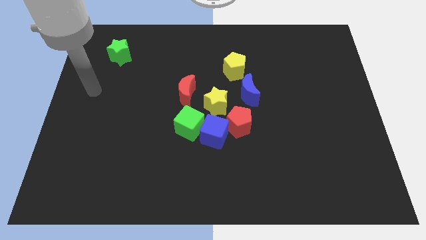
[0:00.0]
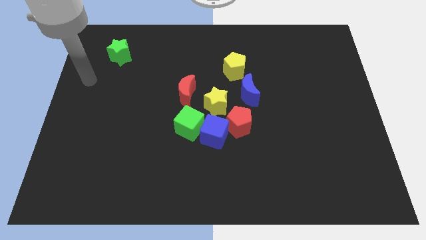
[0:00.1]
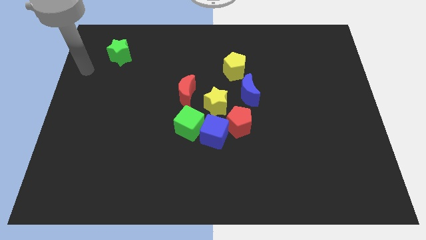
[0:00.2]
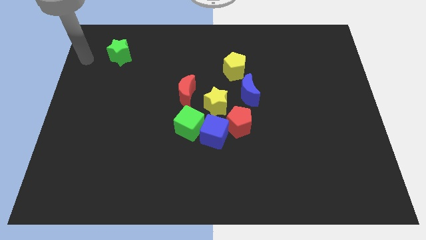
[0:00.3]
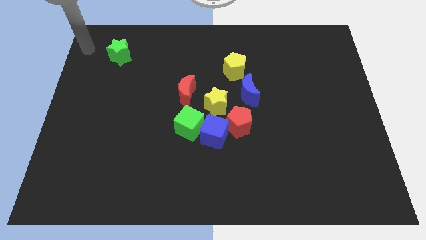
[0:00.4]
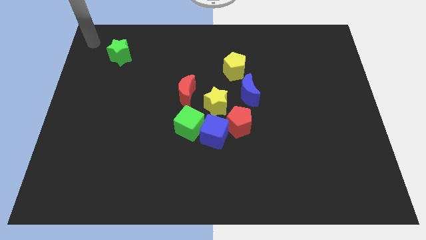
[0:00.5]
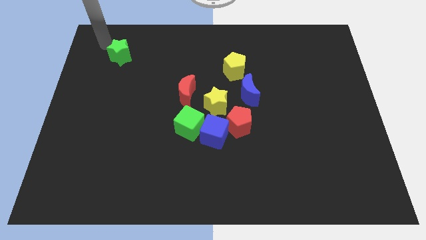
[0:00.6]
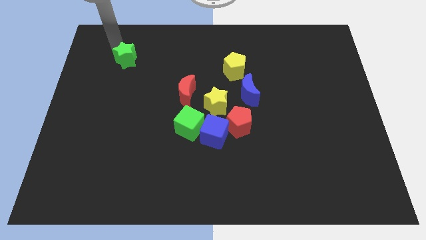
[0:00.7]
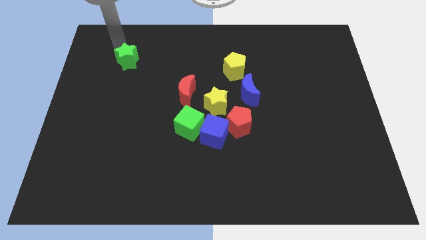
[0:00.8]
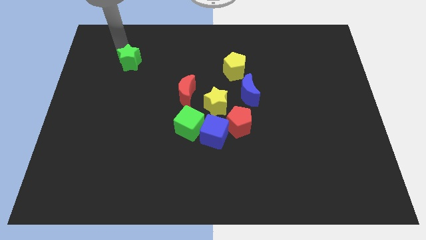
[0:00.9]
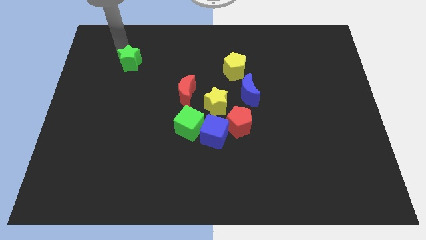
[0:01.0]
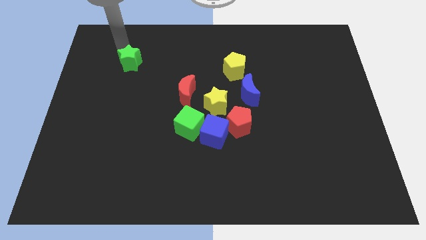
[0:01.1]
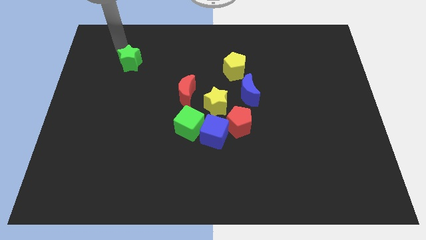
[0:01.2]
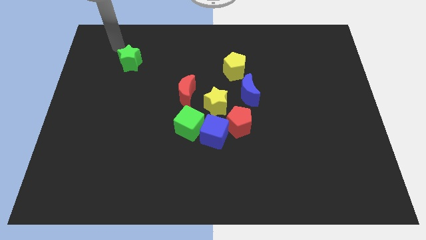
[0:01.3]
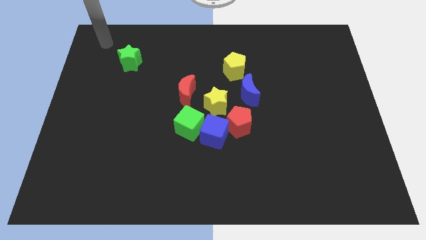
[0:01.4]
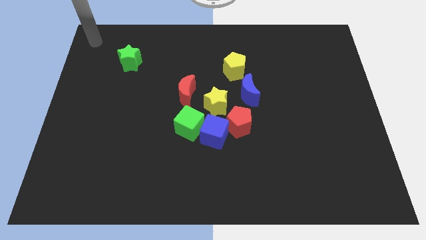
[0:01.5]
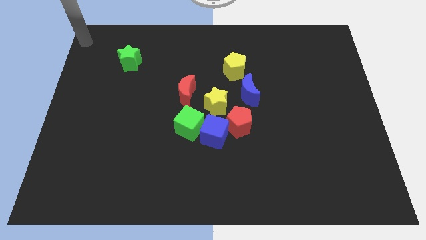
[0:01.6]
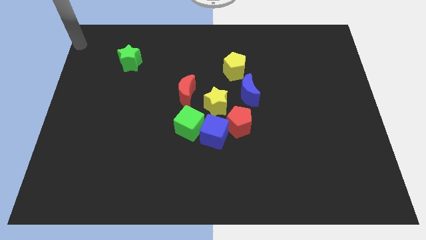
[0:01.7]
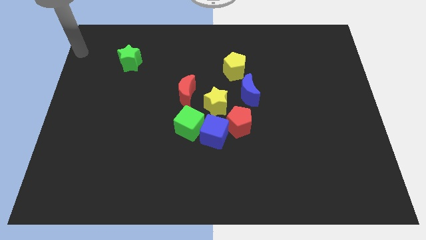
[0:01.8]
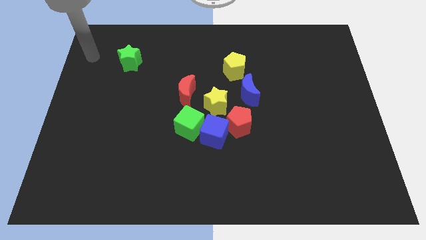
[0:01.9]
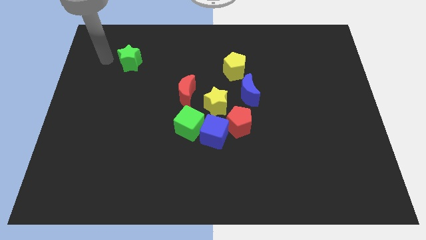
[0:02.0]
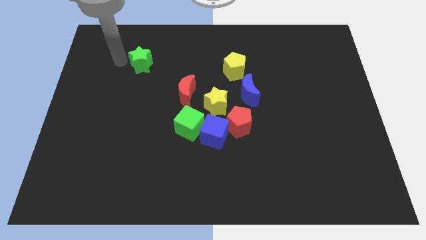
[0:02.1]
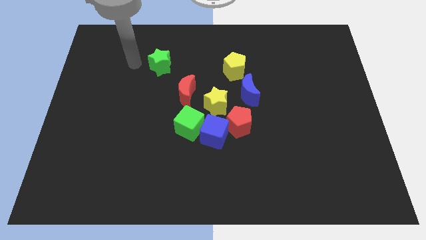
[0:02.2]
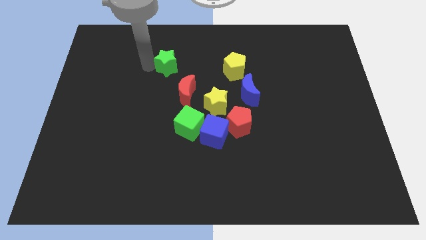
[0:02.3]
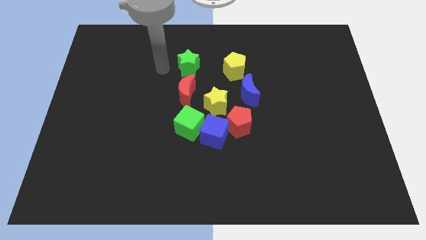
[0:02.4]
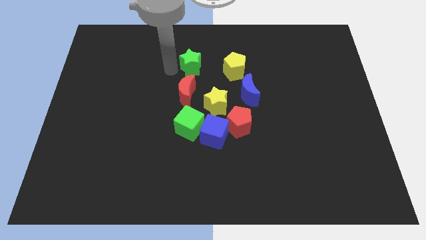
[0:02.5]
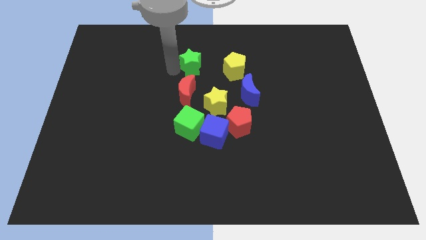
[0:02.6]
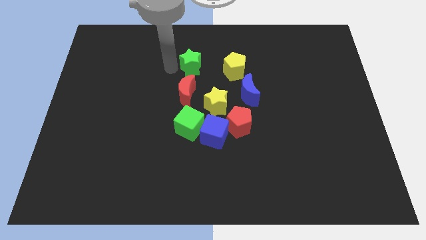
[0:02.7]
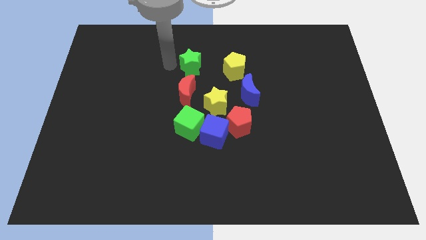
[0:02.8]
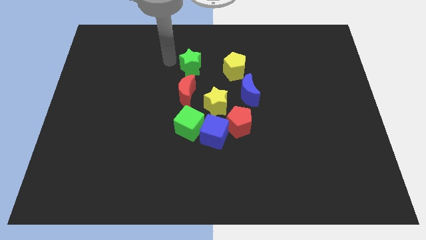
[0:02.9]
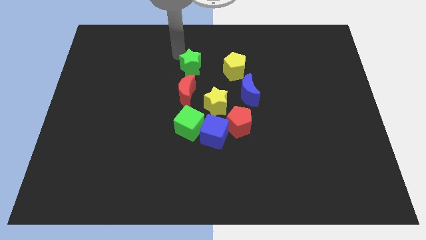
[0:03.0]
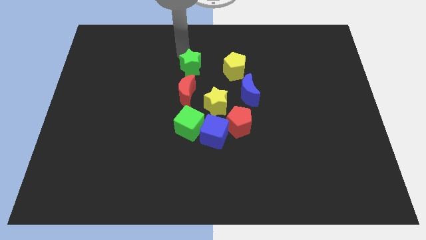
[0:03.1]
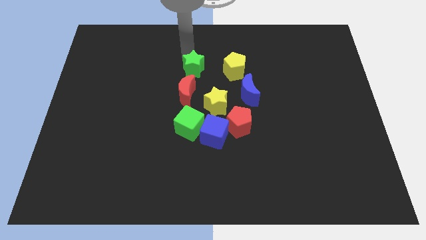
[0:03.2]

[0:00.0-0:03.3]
move the green star above the red moon

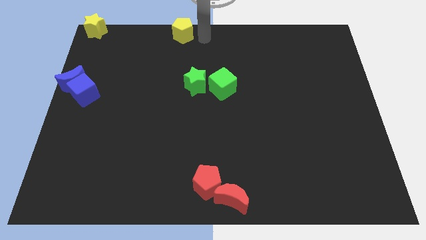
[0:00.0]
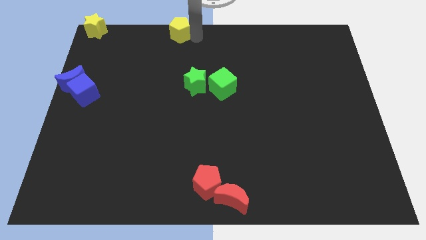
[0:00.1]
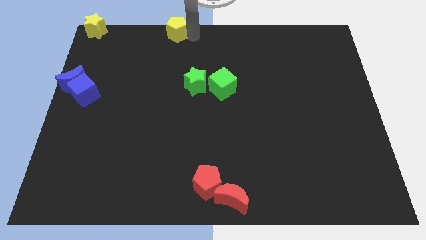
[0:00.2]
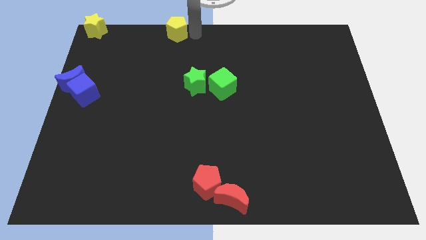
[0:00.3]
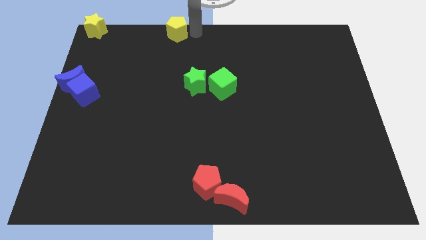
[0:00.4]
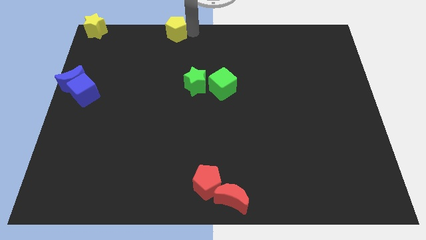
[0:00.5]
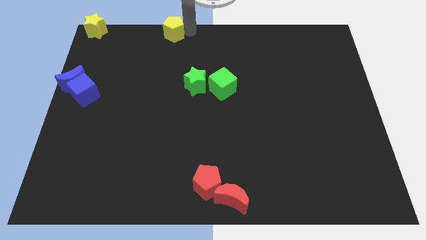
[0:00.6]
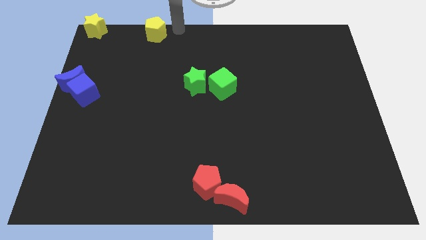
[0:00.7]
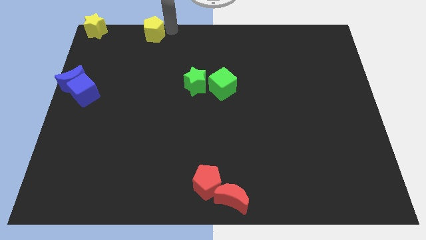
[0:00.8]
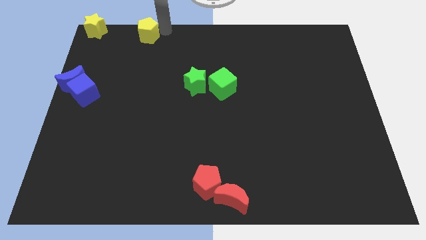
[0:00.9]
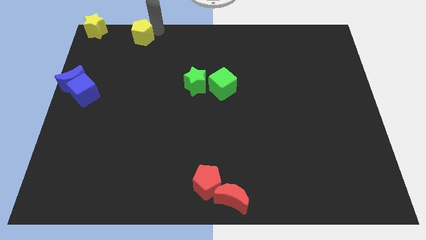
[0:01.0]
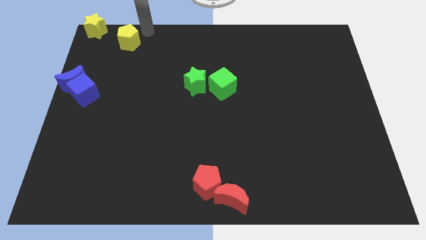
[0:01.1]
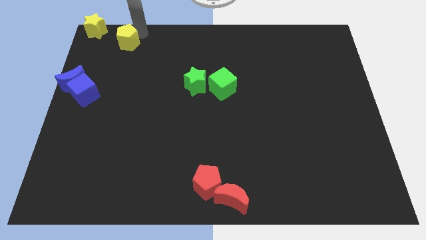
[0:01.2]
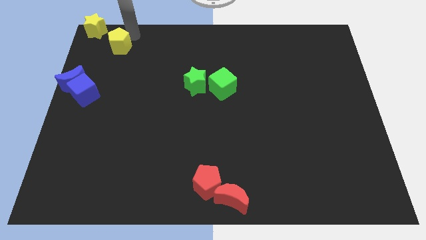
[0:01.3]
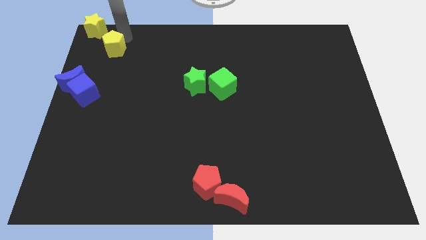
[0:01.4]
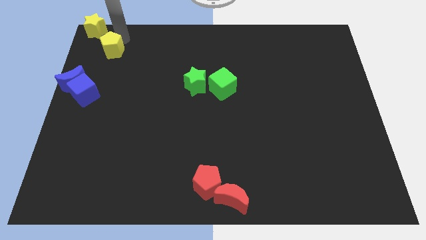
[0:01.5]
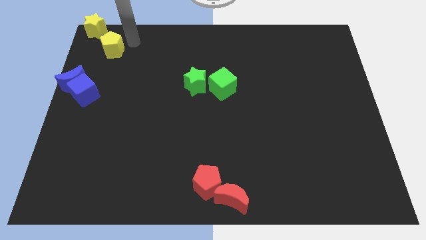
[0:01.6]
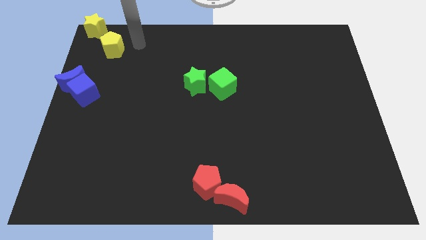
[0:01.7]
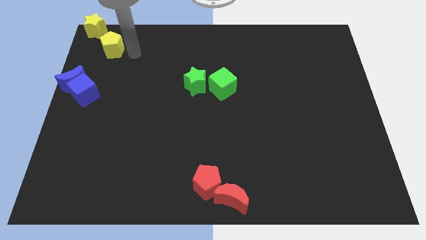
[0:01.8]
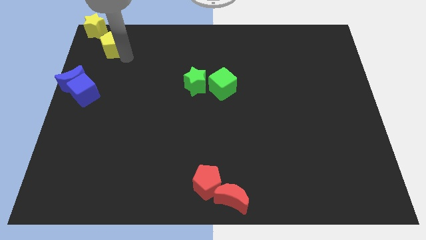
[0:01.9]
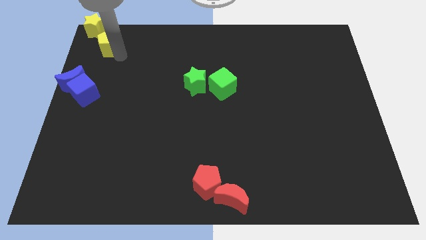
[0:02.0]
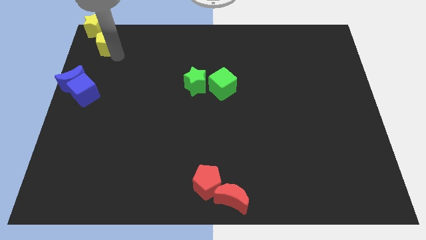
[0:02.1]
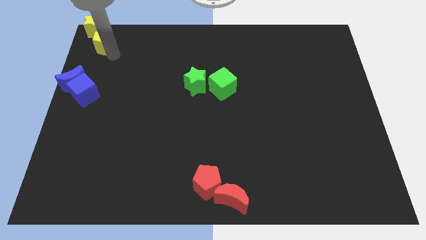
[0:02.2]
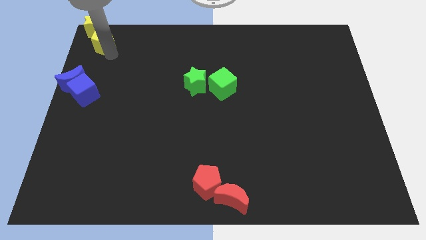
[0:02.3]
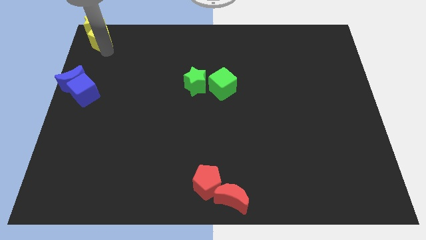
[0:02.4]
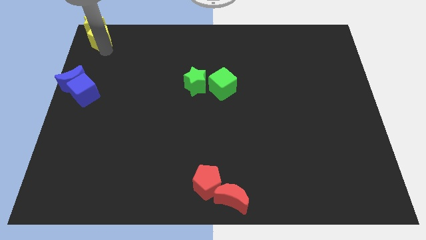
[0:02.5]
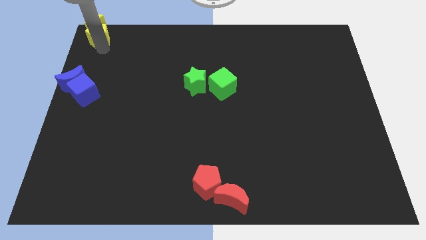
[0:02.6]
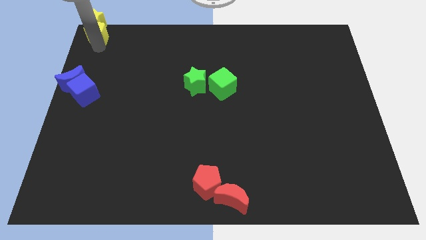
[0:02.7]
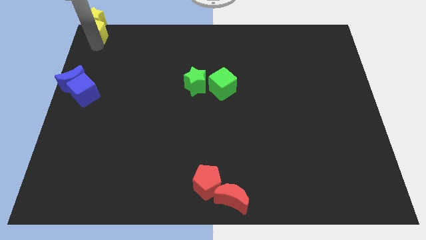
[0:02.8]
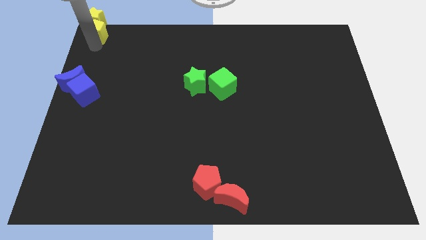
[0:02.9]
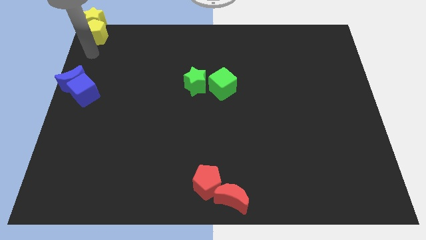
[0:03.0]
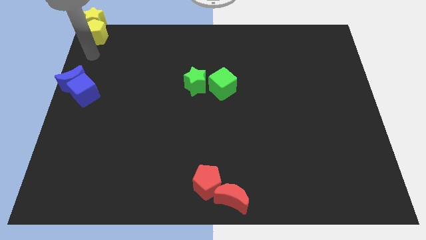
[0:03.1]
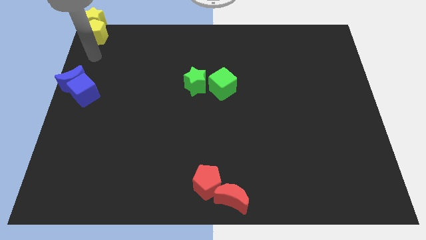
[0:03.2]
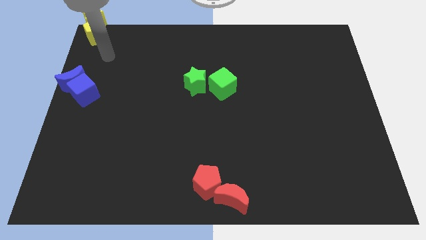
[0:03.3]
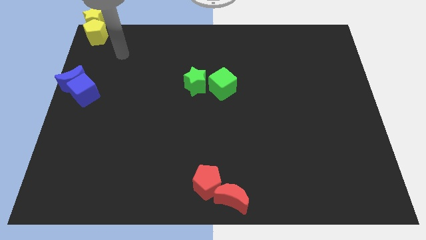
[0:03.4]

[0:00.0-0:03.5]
move the yellow pentagon towards the top left of the board

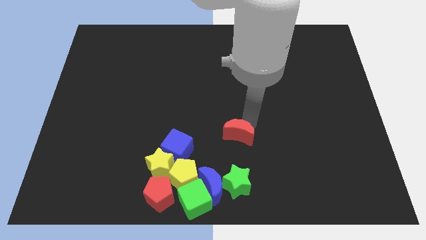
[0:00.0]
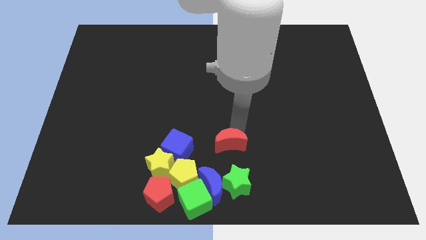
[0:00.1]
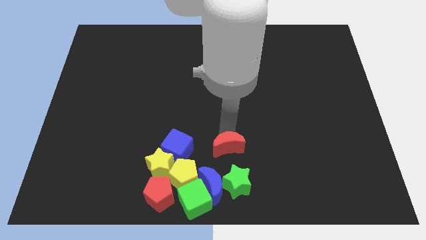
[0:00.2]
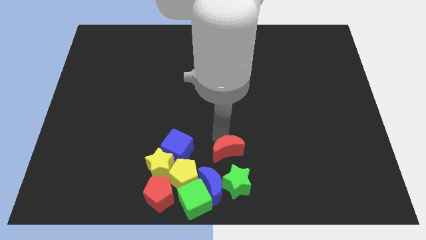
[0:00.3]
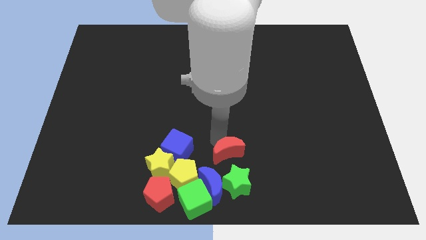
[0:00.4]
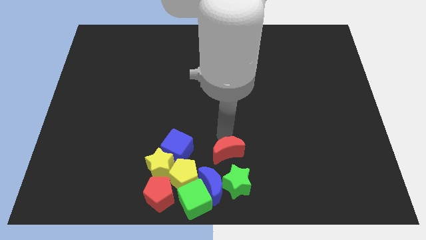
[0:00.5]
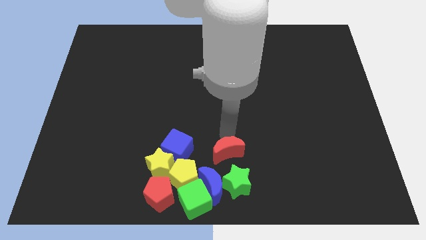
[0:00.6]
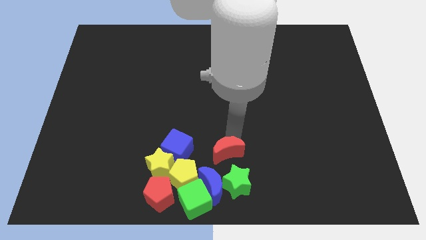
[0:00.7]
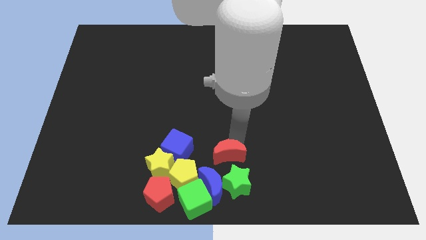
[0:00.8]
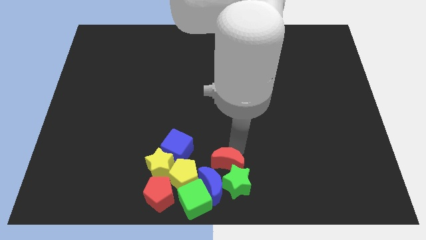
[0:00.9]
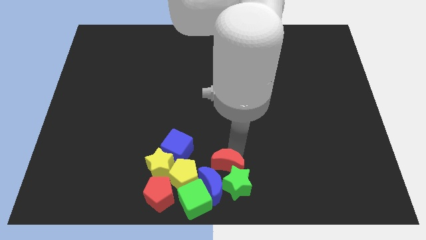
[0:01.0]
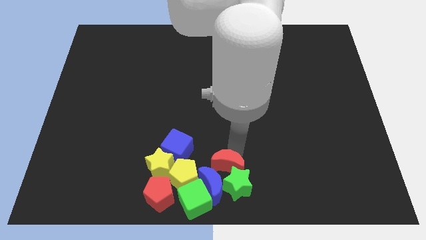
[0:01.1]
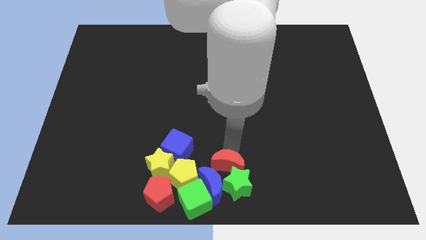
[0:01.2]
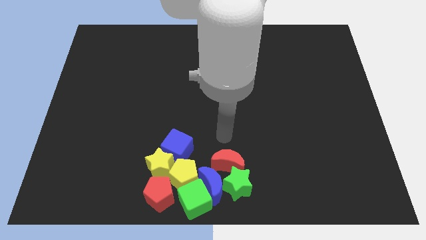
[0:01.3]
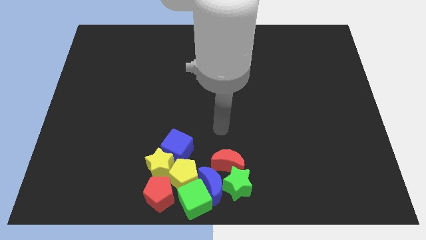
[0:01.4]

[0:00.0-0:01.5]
place the red moon into the group of blocks at the bottom center of the board

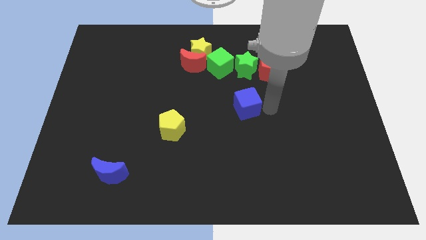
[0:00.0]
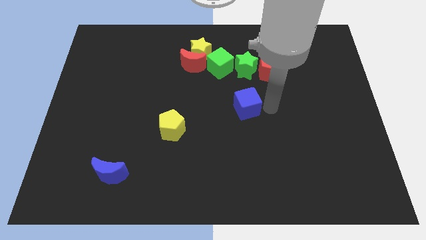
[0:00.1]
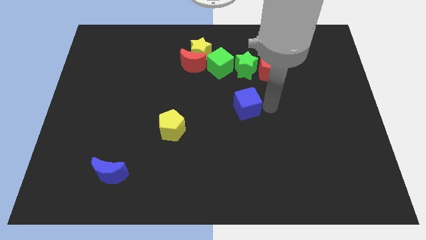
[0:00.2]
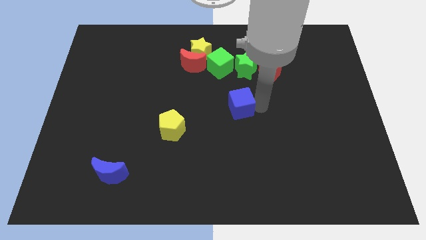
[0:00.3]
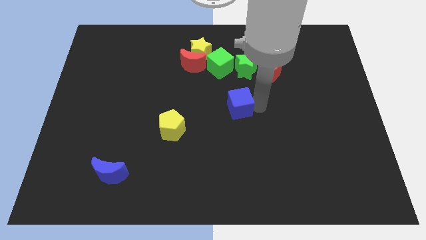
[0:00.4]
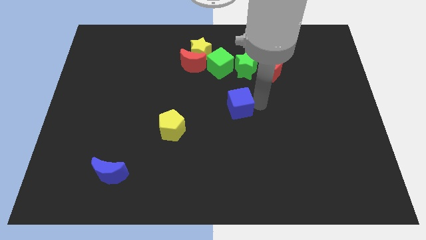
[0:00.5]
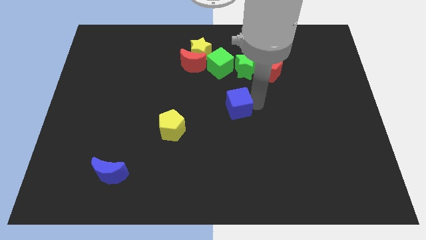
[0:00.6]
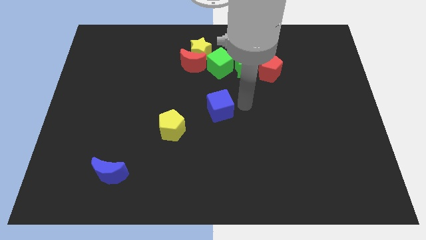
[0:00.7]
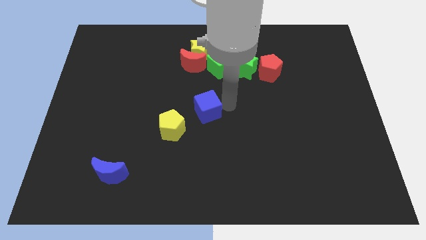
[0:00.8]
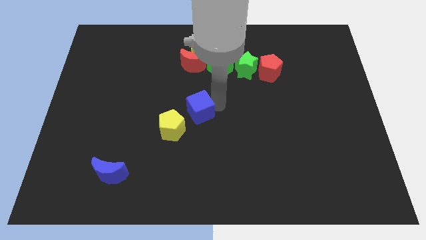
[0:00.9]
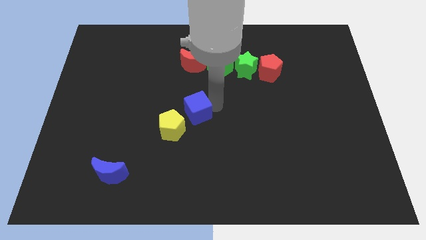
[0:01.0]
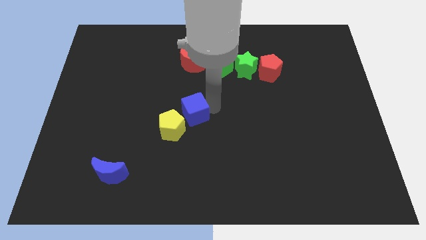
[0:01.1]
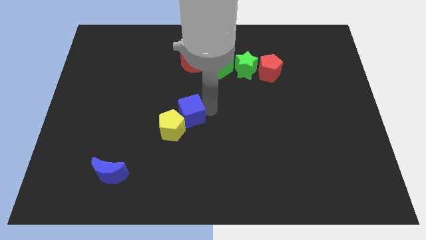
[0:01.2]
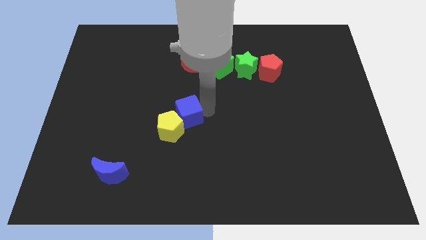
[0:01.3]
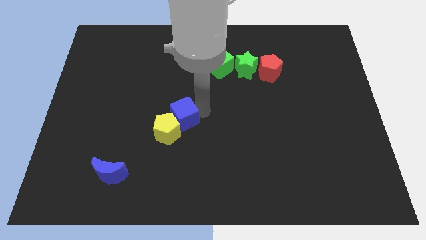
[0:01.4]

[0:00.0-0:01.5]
move the blue cube into the yellow pentagon
